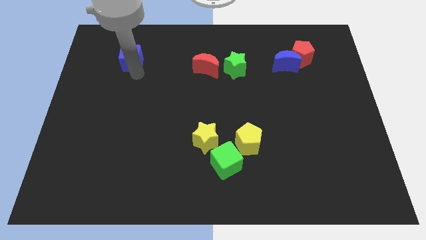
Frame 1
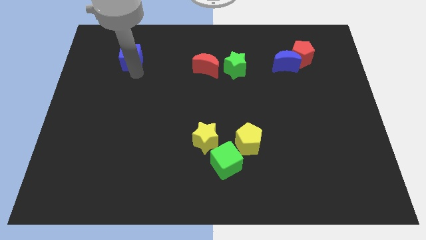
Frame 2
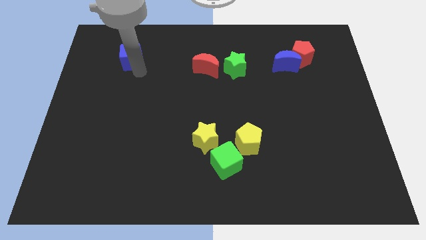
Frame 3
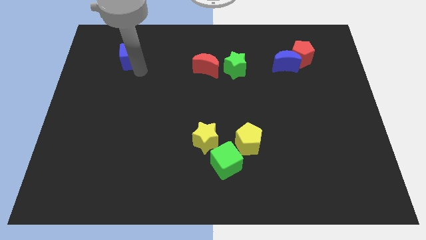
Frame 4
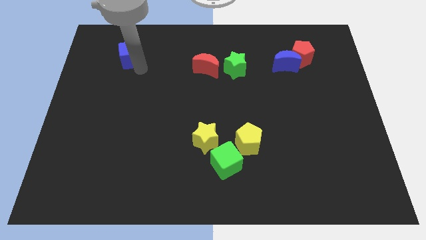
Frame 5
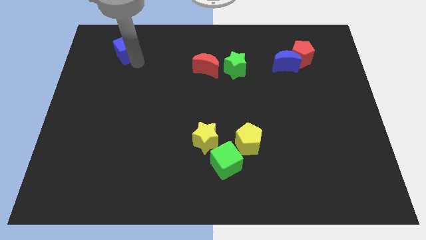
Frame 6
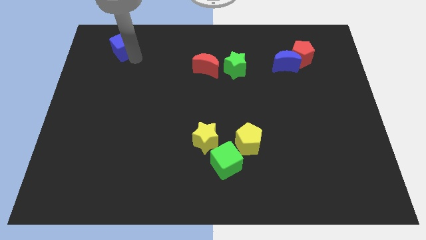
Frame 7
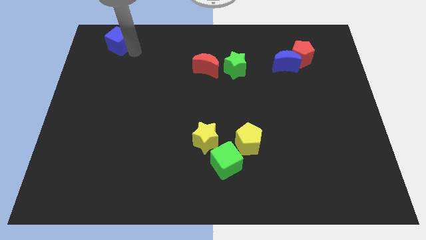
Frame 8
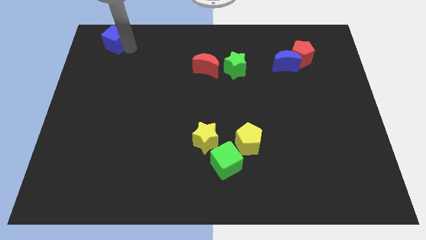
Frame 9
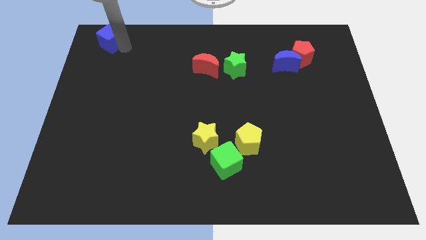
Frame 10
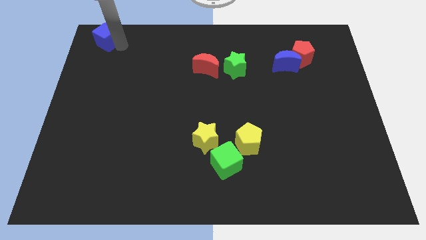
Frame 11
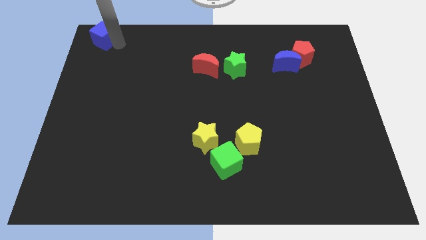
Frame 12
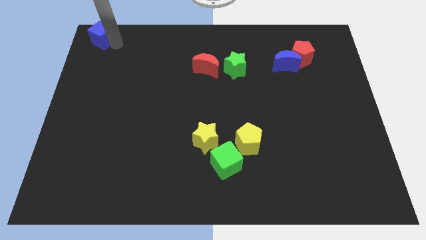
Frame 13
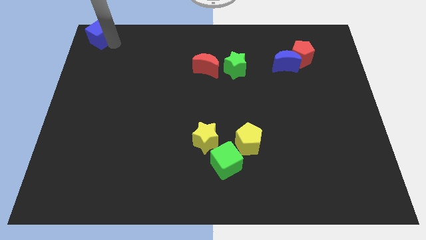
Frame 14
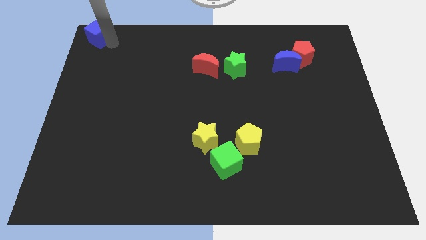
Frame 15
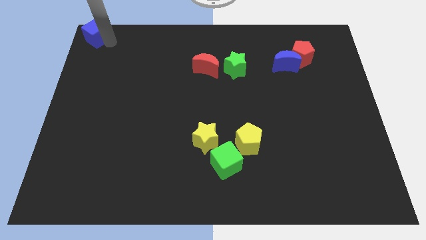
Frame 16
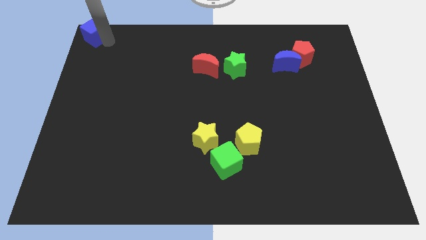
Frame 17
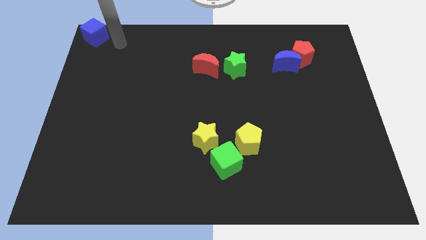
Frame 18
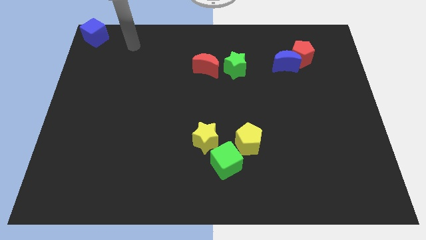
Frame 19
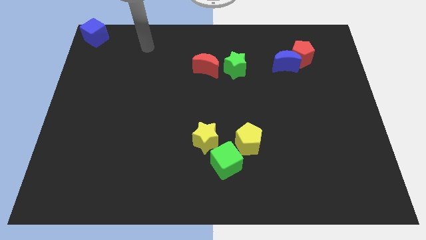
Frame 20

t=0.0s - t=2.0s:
place the blue cube to the top left corner of the board

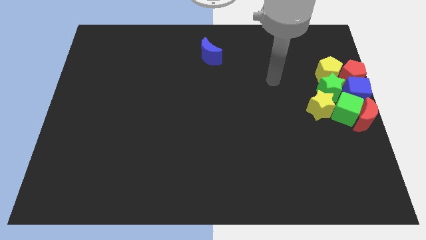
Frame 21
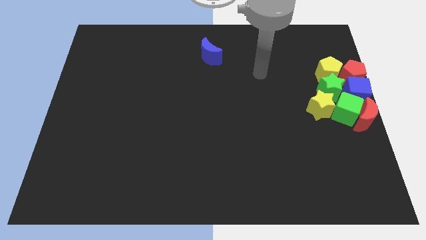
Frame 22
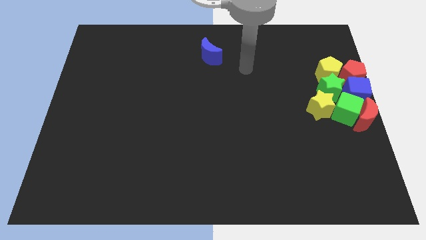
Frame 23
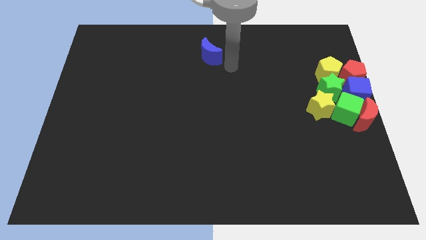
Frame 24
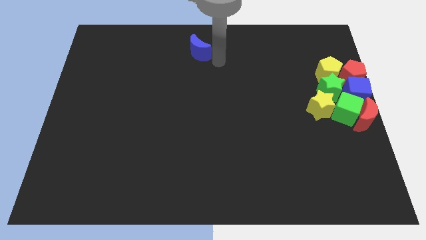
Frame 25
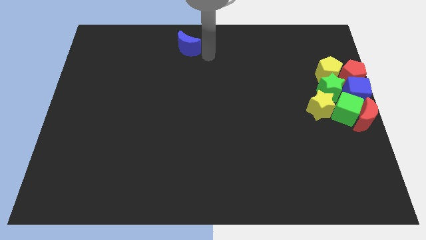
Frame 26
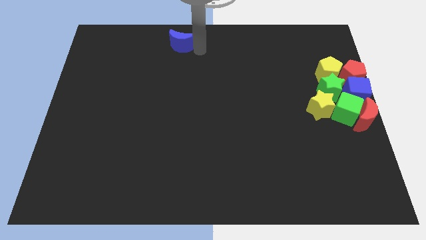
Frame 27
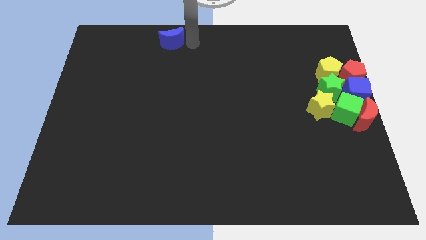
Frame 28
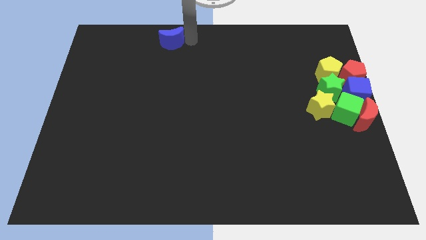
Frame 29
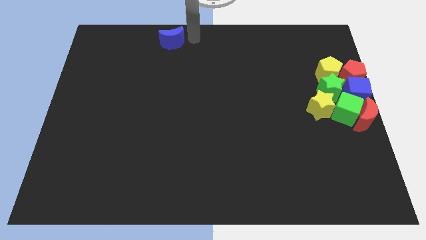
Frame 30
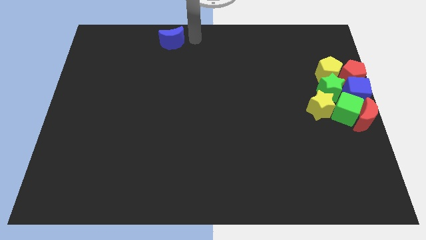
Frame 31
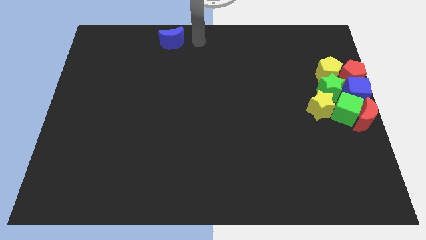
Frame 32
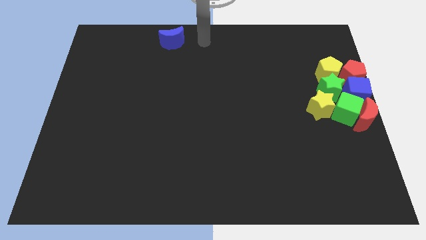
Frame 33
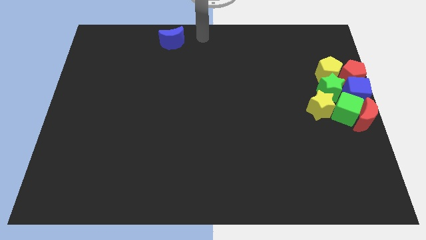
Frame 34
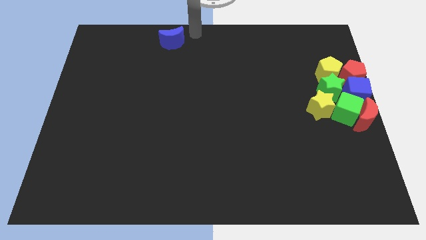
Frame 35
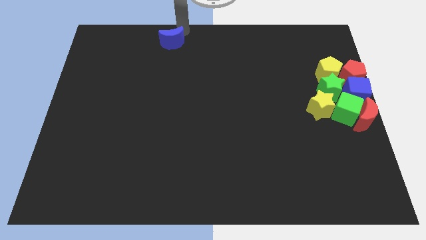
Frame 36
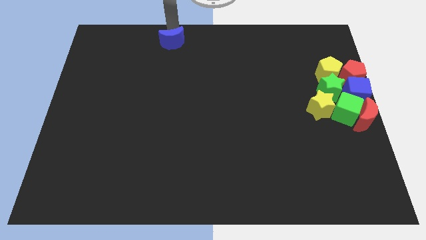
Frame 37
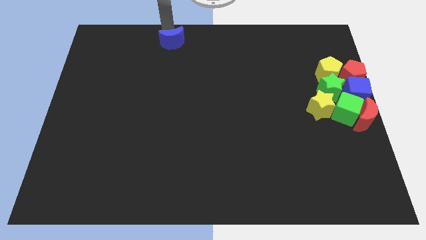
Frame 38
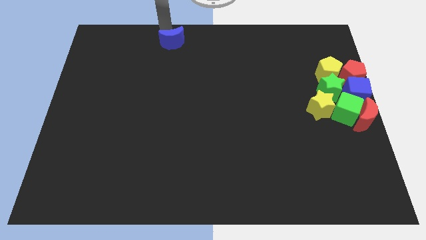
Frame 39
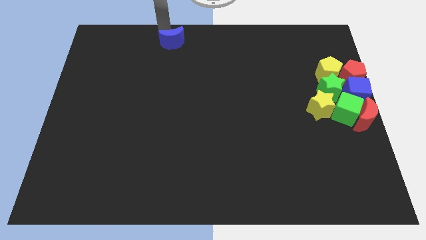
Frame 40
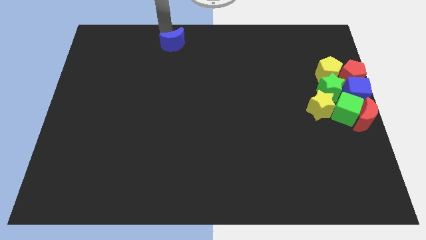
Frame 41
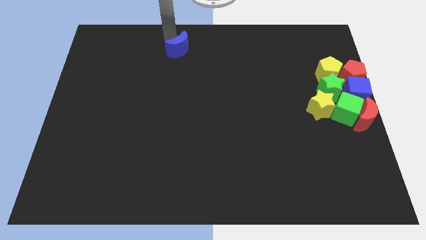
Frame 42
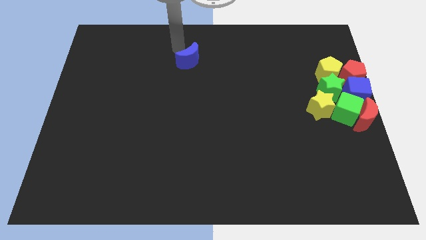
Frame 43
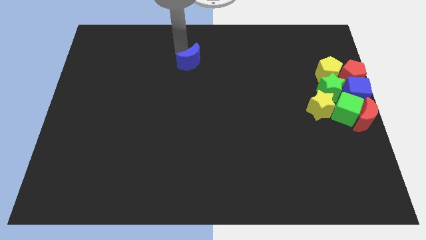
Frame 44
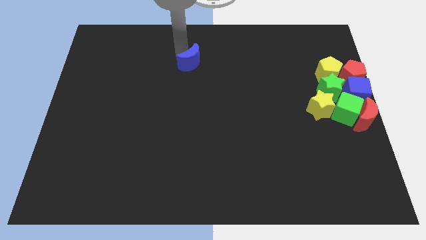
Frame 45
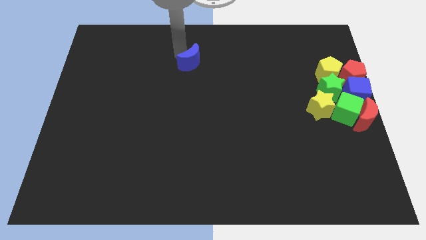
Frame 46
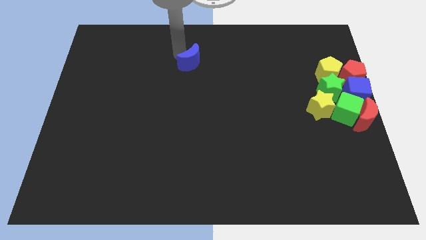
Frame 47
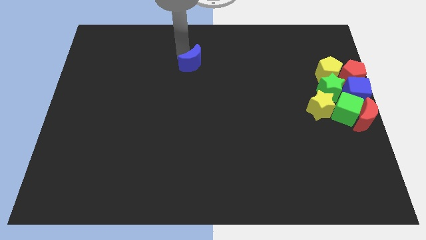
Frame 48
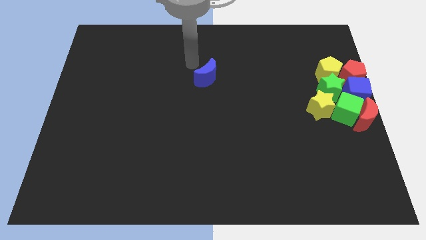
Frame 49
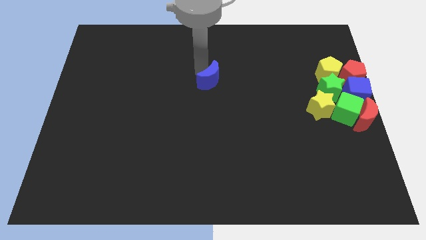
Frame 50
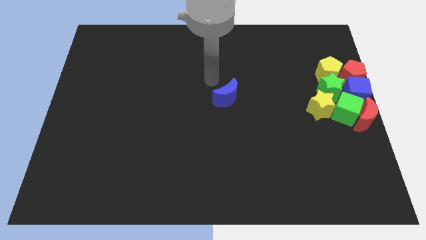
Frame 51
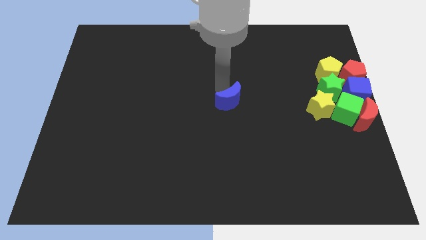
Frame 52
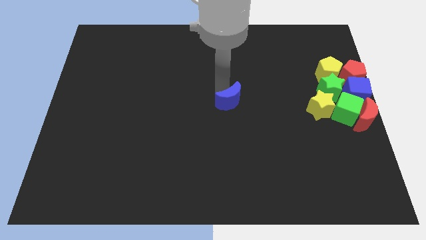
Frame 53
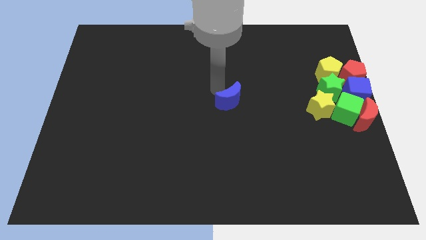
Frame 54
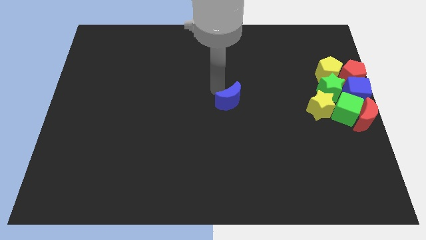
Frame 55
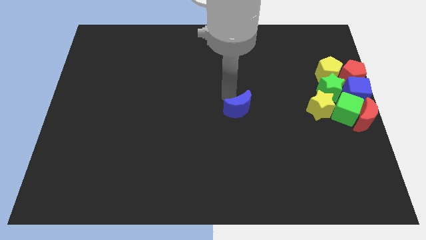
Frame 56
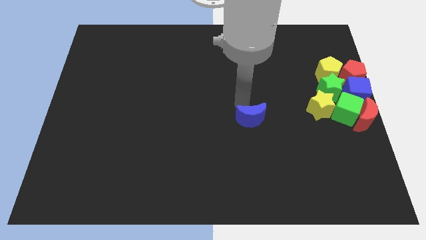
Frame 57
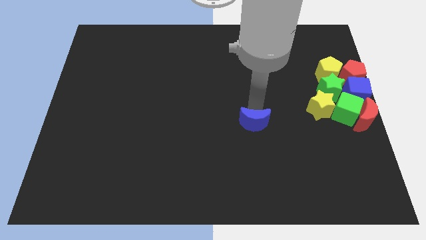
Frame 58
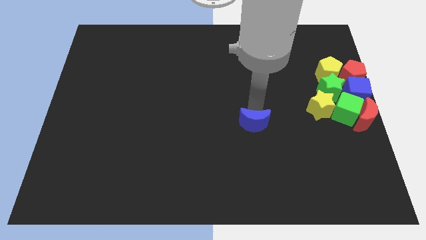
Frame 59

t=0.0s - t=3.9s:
move the blue crescent towards the center of the board

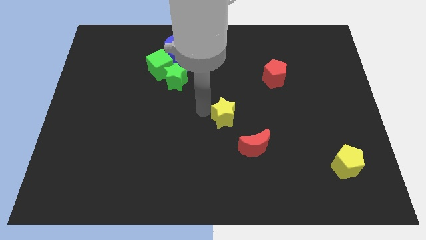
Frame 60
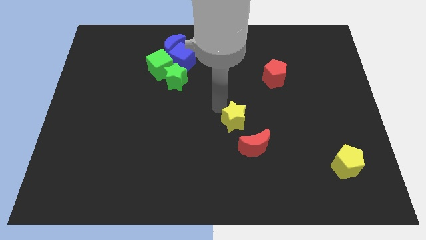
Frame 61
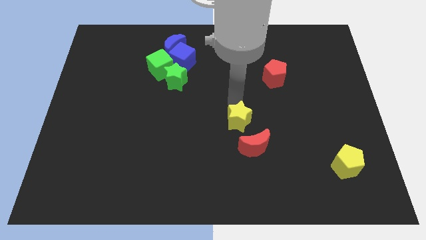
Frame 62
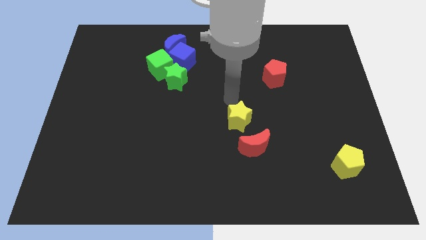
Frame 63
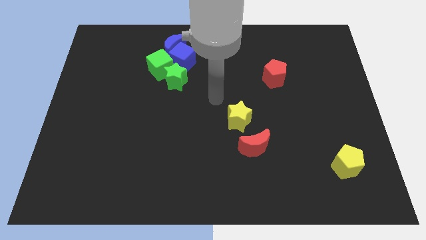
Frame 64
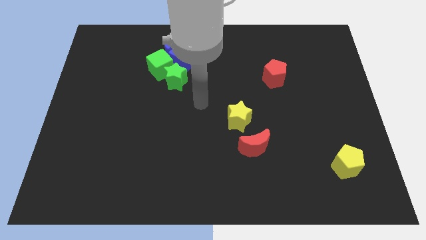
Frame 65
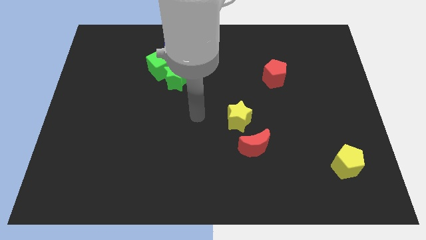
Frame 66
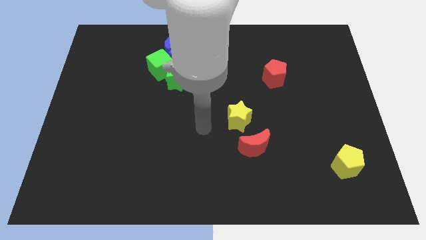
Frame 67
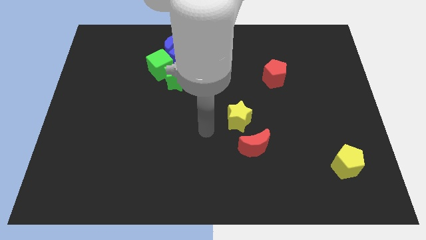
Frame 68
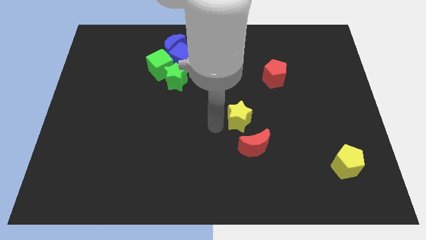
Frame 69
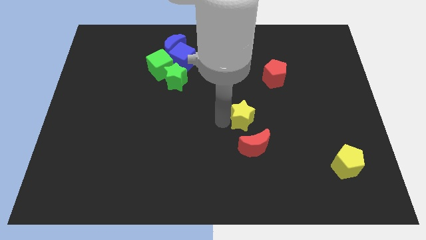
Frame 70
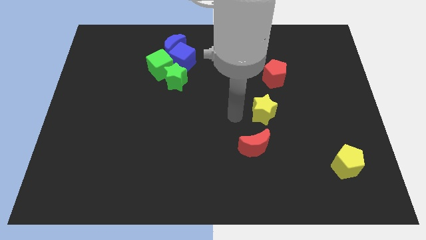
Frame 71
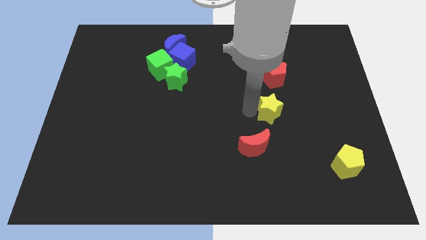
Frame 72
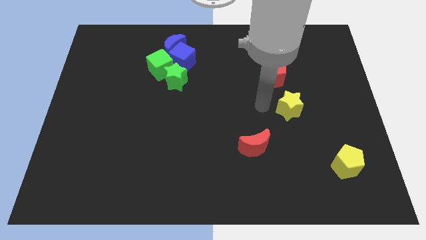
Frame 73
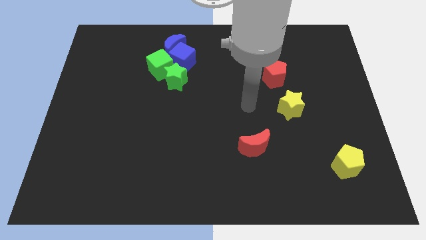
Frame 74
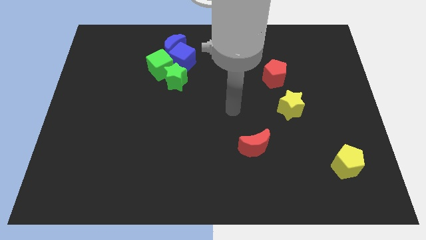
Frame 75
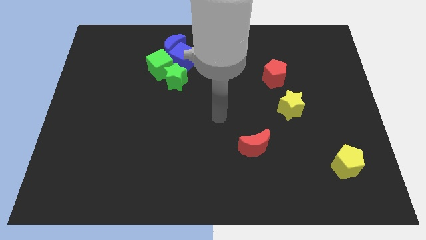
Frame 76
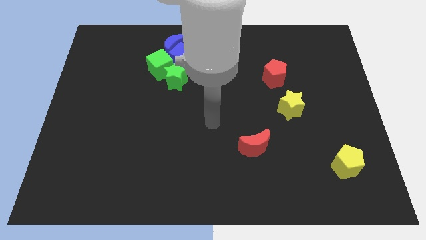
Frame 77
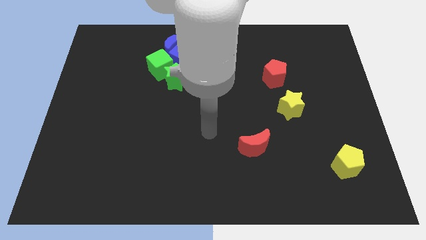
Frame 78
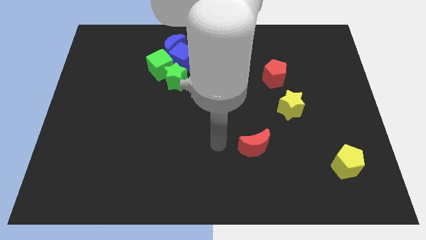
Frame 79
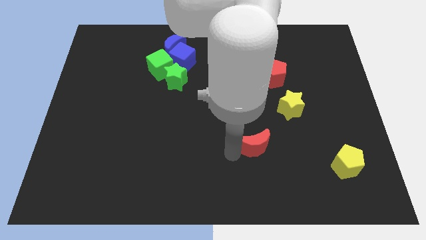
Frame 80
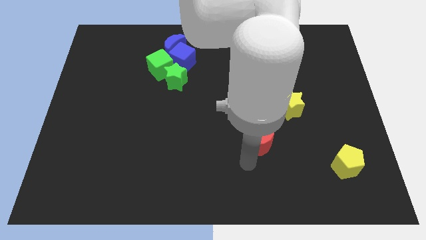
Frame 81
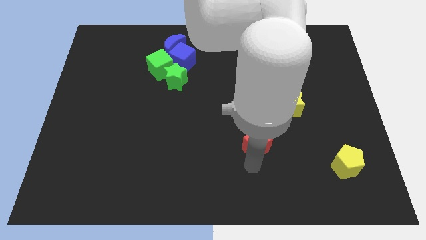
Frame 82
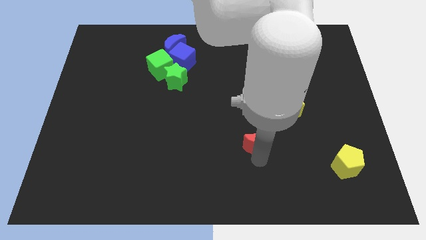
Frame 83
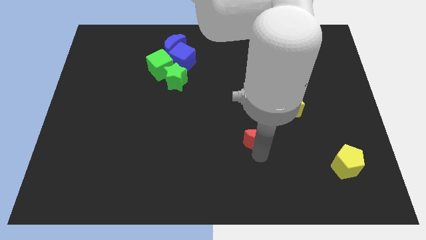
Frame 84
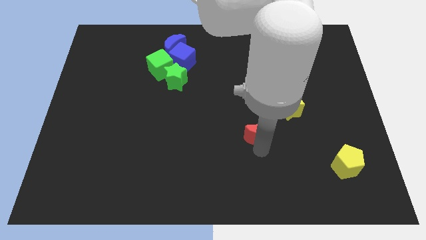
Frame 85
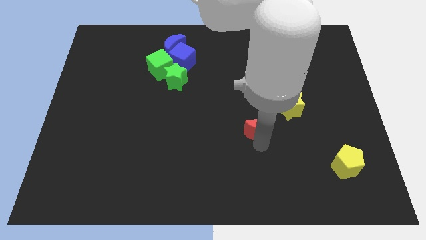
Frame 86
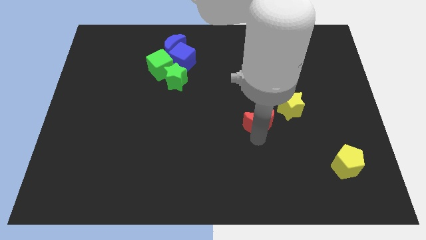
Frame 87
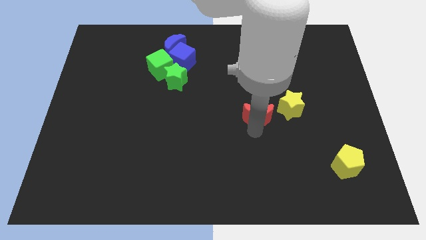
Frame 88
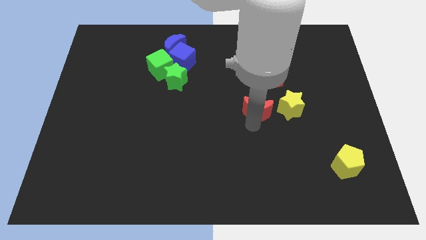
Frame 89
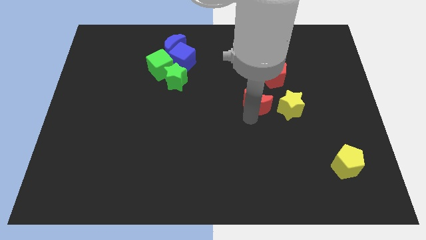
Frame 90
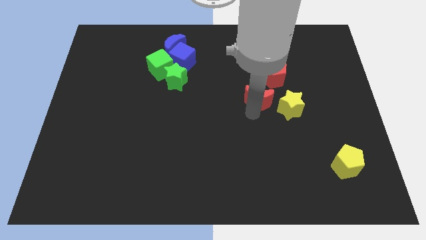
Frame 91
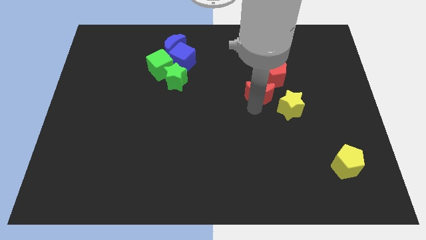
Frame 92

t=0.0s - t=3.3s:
place red moon towards top left of the yellow star
